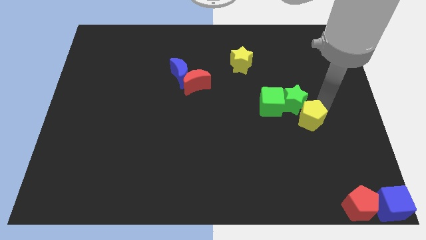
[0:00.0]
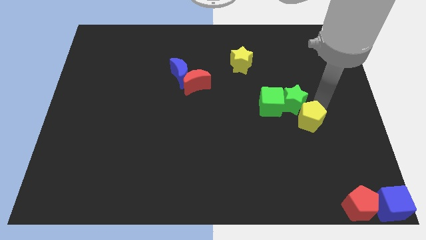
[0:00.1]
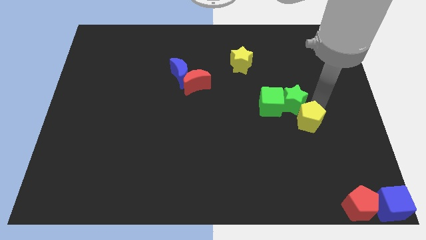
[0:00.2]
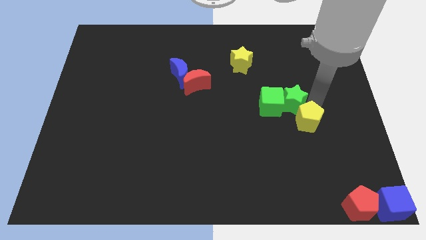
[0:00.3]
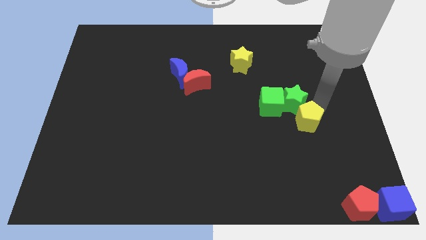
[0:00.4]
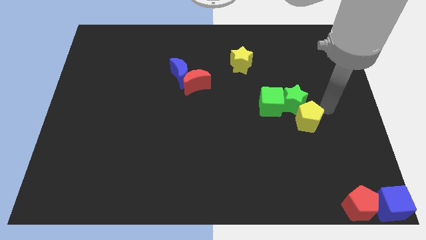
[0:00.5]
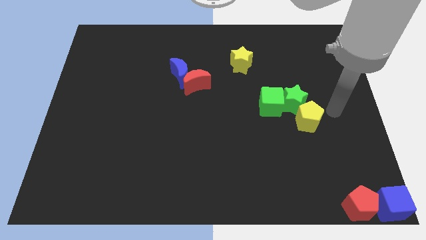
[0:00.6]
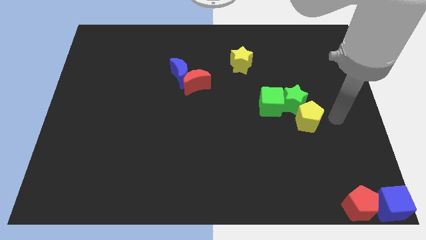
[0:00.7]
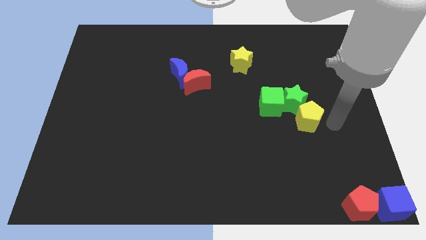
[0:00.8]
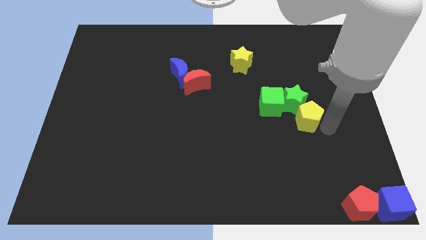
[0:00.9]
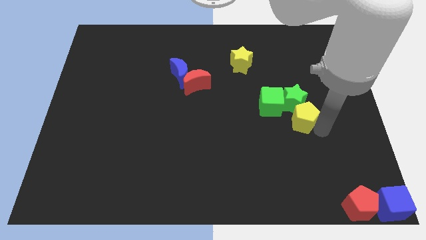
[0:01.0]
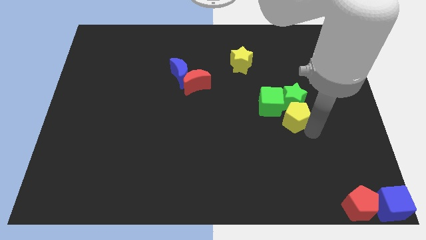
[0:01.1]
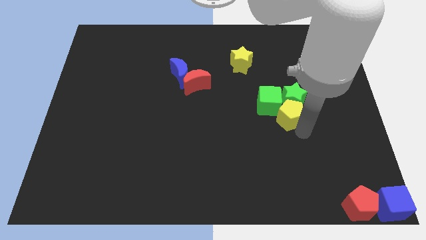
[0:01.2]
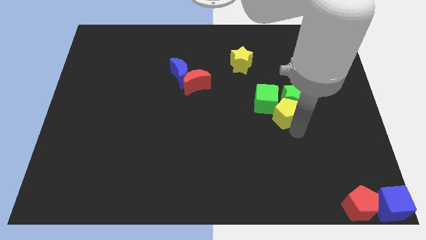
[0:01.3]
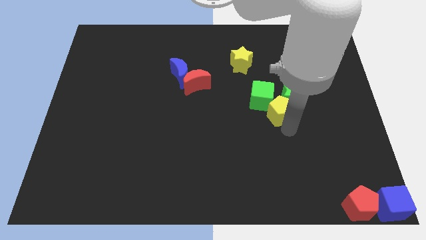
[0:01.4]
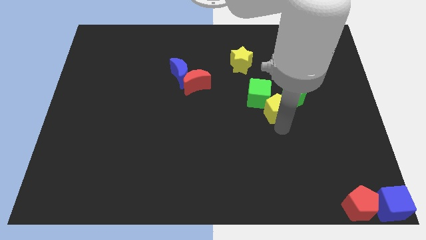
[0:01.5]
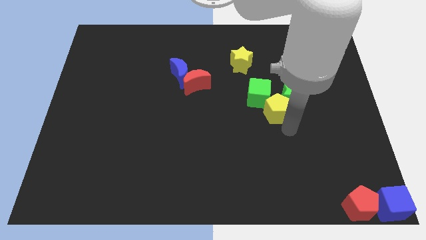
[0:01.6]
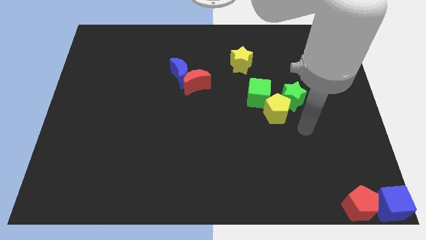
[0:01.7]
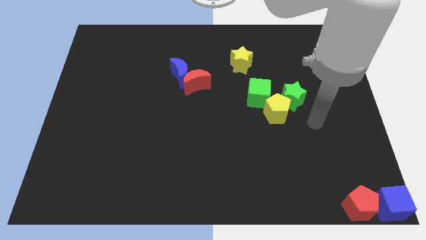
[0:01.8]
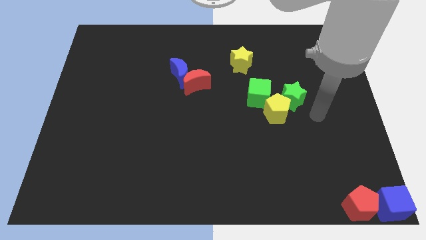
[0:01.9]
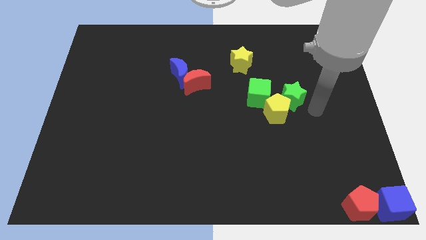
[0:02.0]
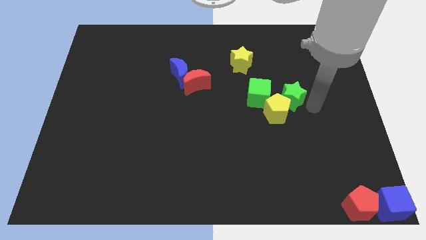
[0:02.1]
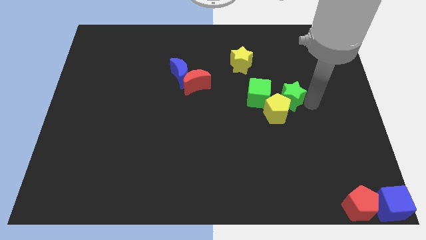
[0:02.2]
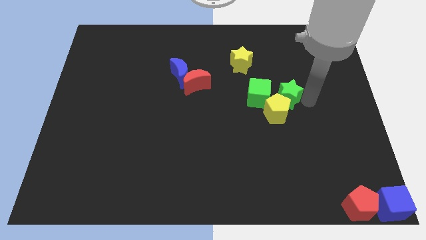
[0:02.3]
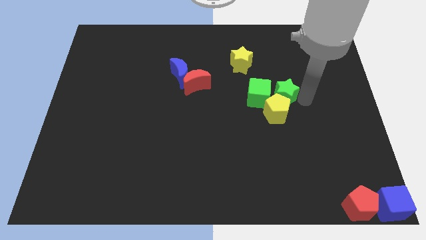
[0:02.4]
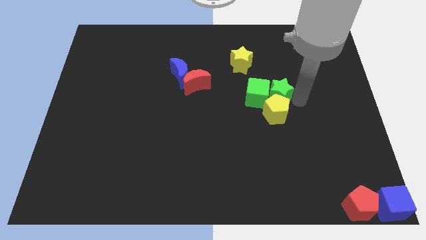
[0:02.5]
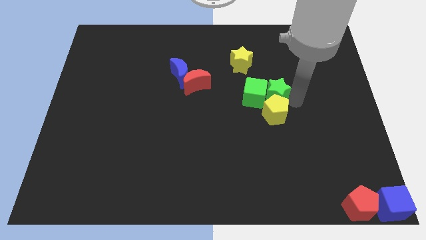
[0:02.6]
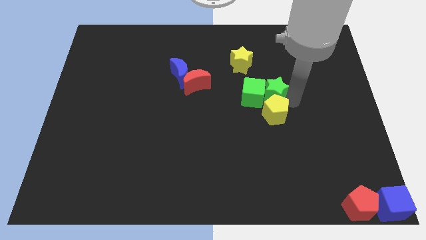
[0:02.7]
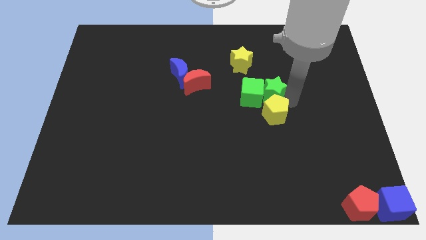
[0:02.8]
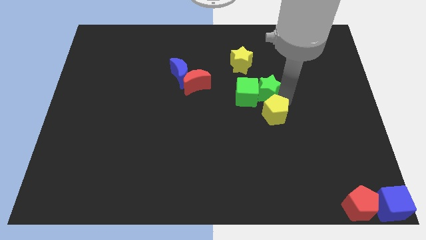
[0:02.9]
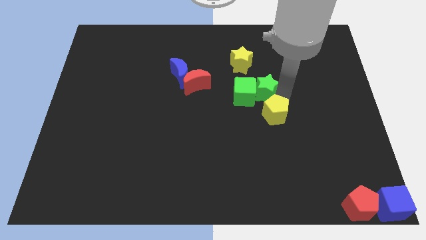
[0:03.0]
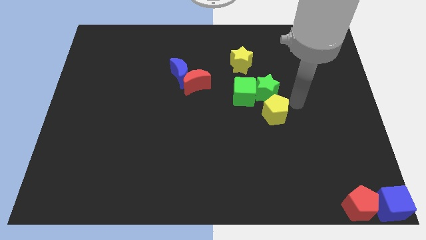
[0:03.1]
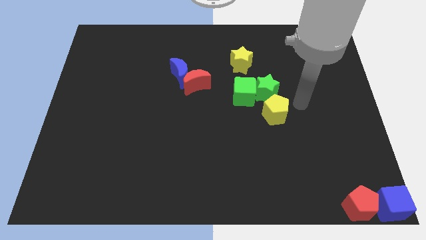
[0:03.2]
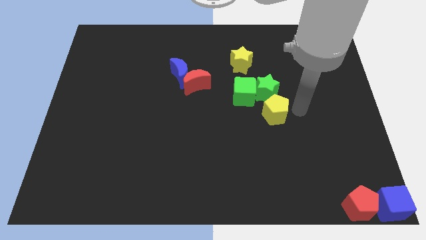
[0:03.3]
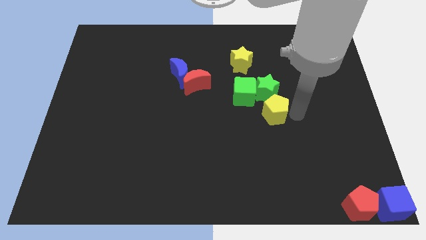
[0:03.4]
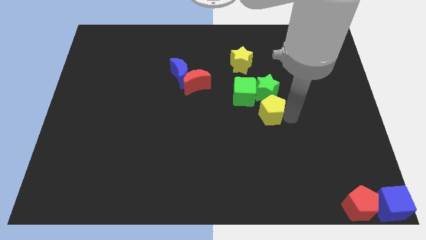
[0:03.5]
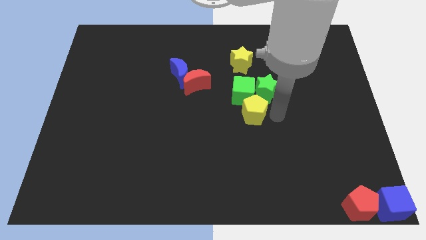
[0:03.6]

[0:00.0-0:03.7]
place the green blocks and yellow pentagon below the yellow star

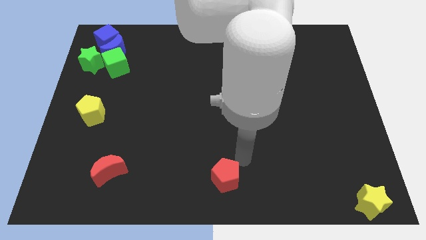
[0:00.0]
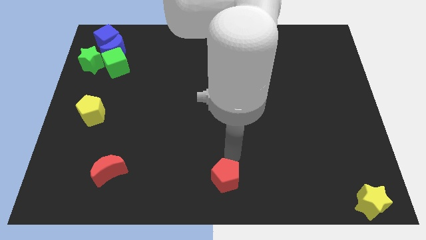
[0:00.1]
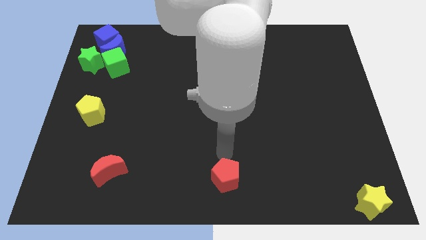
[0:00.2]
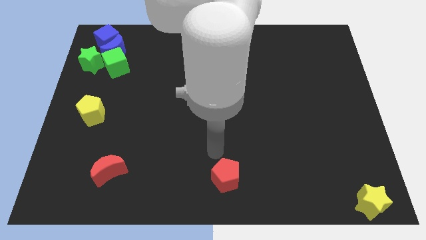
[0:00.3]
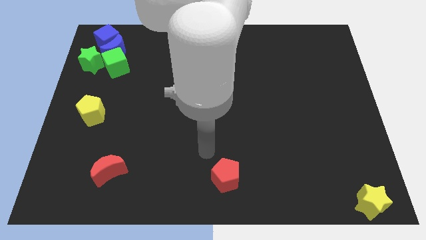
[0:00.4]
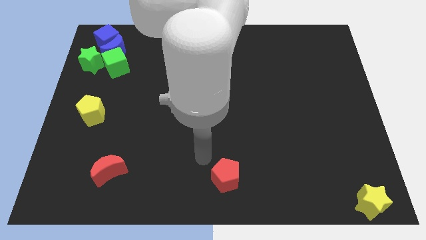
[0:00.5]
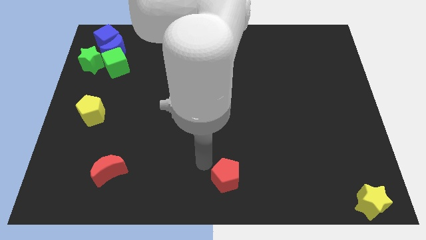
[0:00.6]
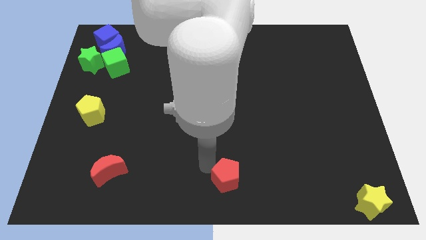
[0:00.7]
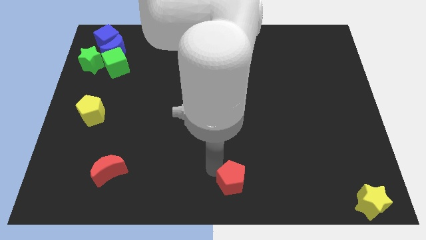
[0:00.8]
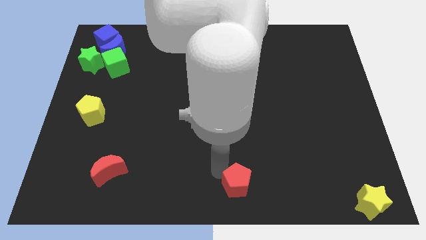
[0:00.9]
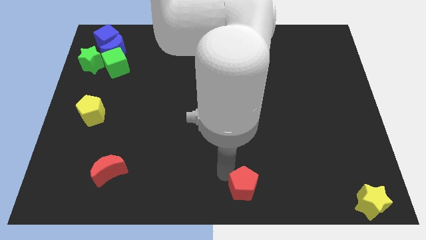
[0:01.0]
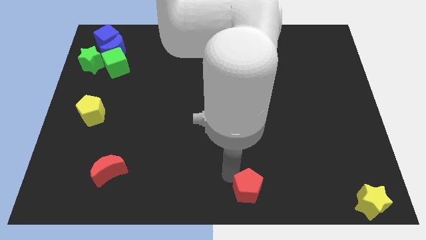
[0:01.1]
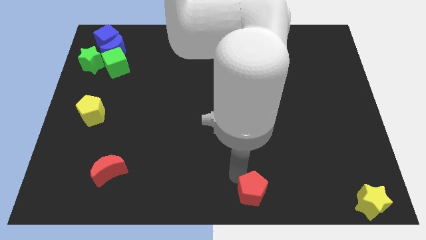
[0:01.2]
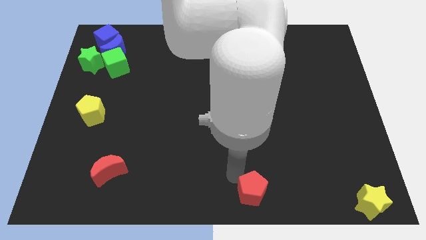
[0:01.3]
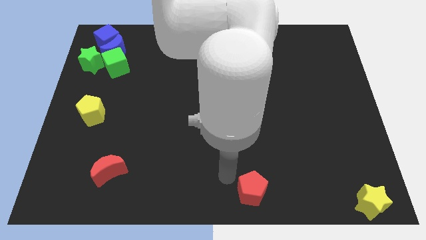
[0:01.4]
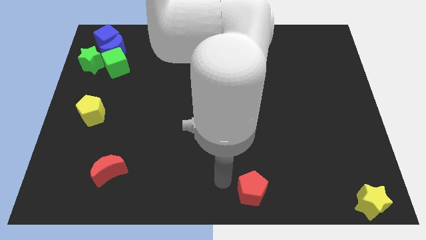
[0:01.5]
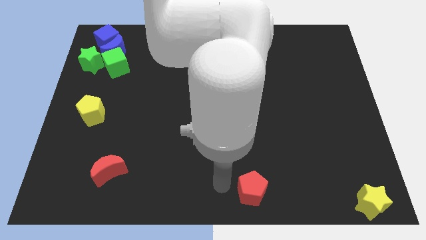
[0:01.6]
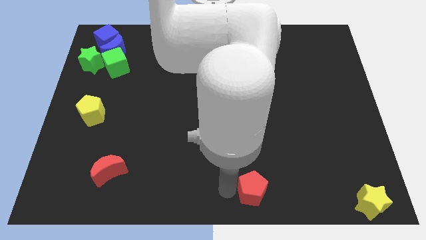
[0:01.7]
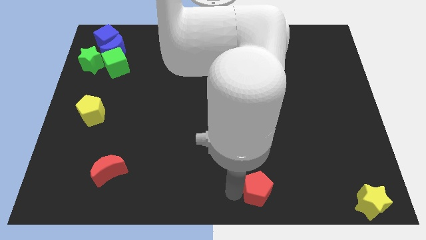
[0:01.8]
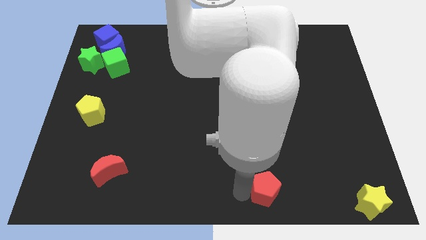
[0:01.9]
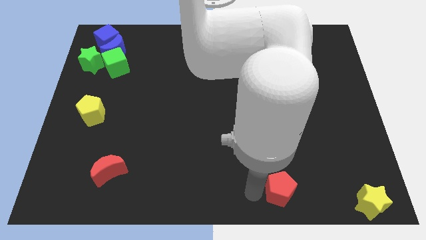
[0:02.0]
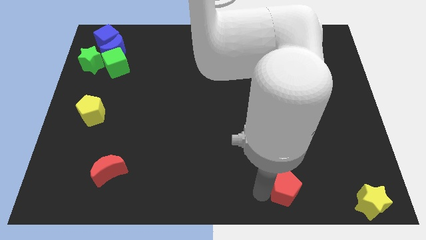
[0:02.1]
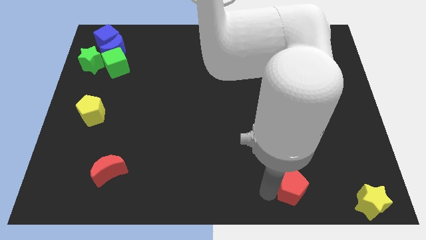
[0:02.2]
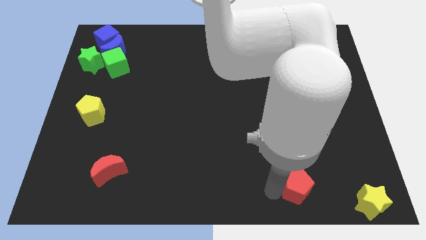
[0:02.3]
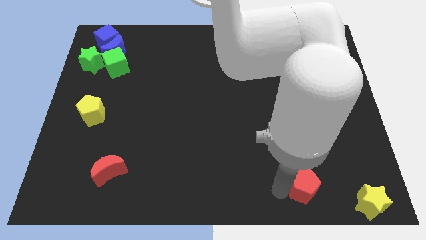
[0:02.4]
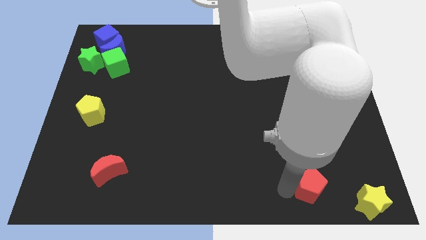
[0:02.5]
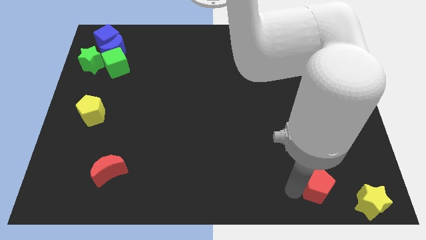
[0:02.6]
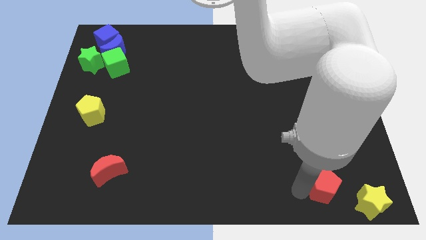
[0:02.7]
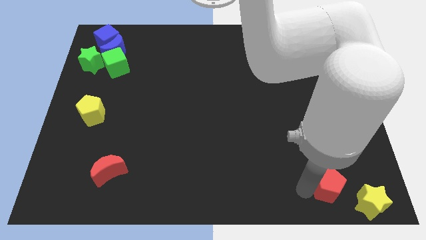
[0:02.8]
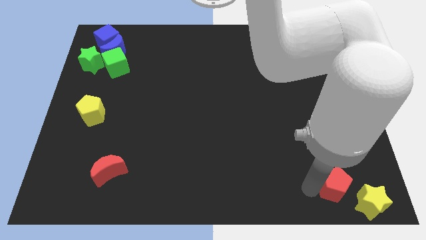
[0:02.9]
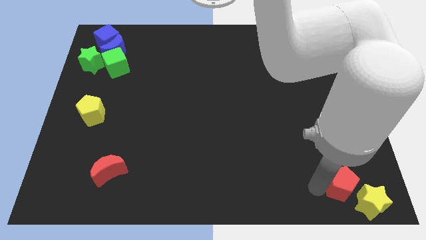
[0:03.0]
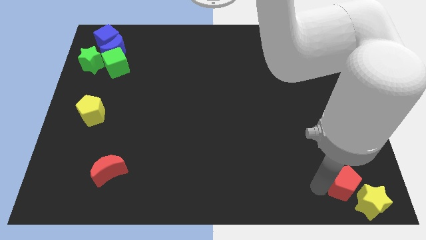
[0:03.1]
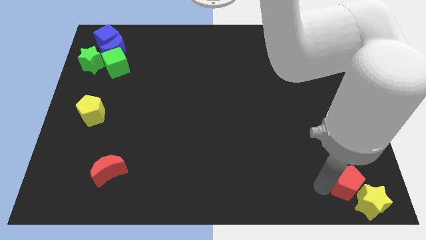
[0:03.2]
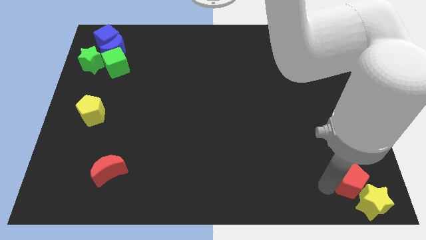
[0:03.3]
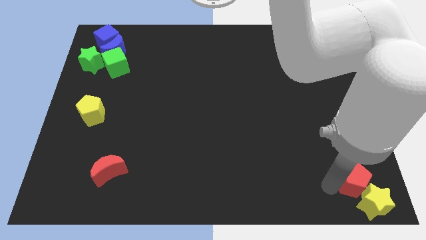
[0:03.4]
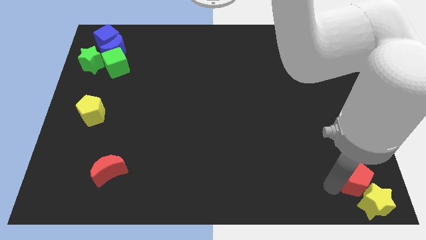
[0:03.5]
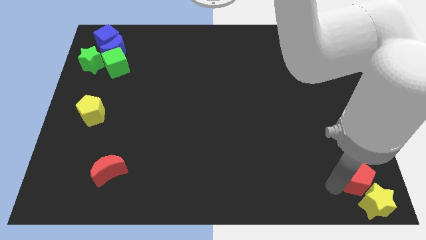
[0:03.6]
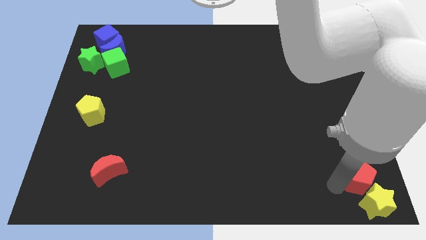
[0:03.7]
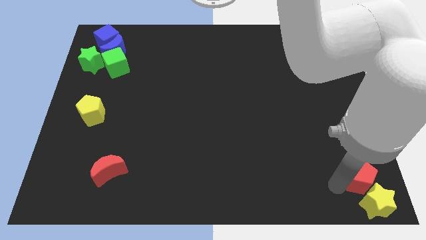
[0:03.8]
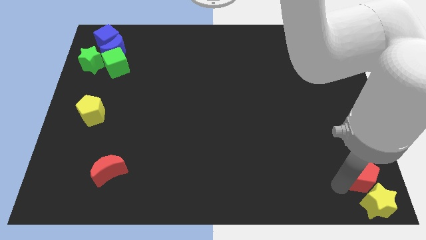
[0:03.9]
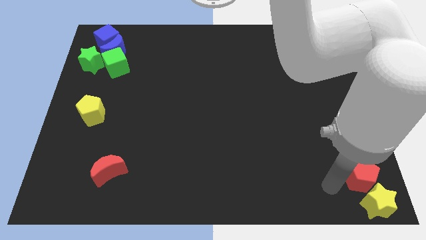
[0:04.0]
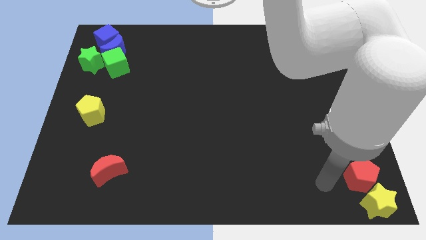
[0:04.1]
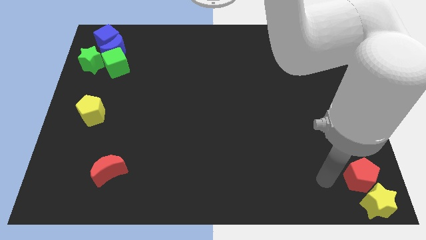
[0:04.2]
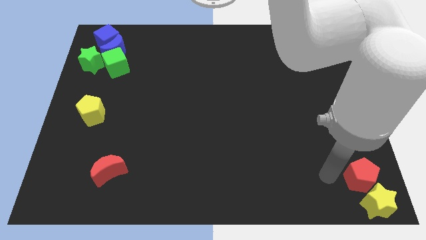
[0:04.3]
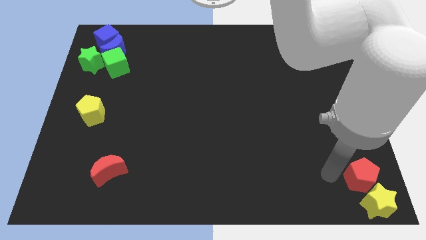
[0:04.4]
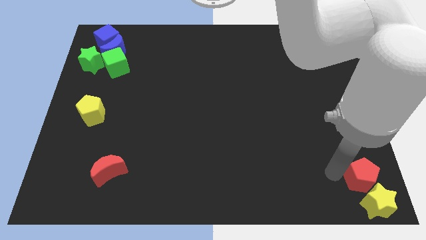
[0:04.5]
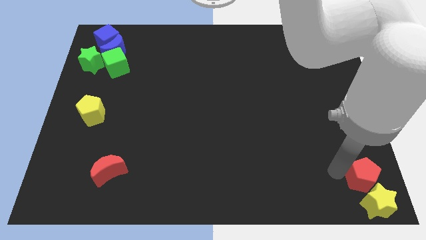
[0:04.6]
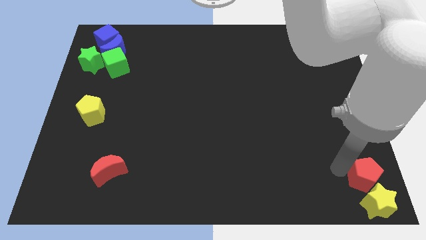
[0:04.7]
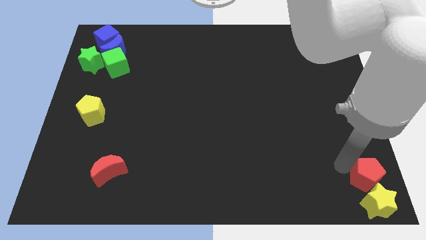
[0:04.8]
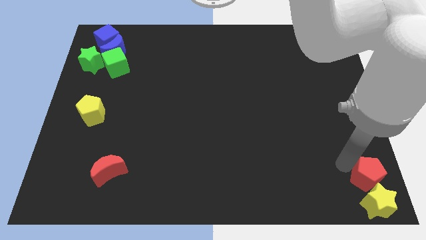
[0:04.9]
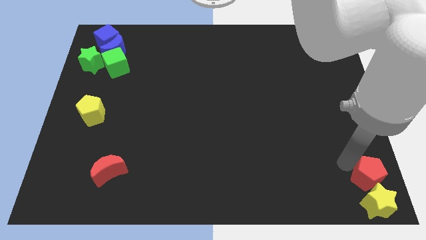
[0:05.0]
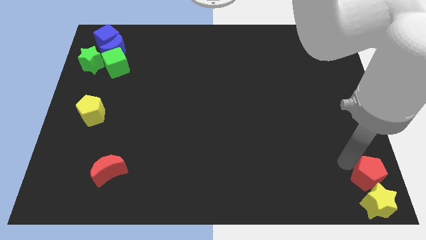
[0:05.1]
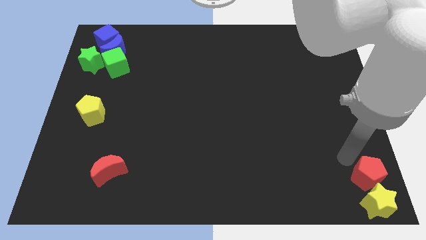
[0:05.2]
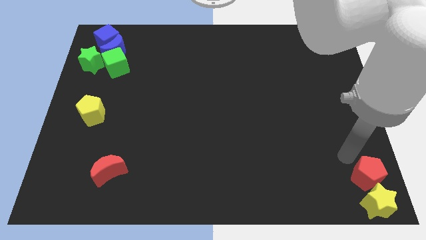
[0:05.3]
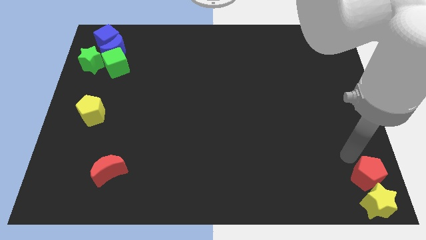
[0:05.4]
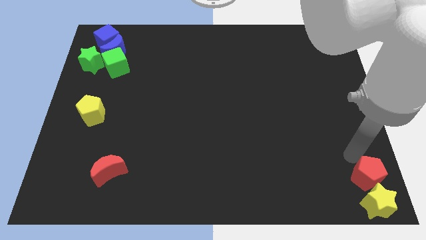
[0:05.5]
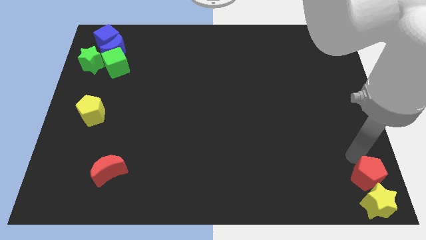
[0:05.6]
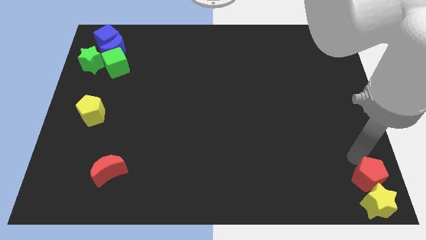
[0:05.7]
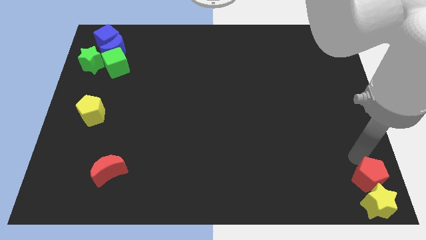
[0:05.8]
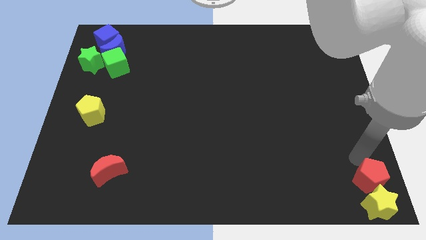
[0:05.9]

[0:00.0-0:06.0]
place the red pentagon above the yellow star
